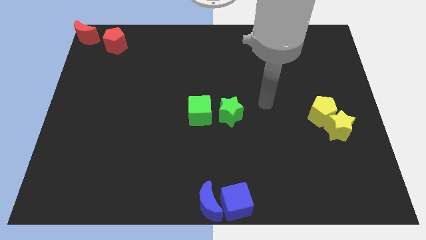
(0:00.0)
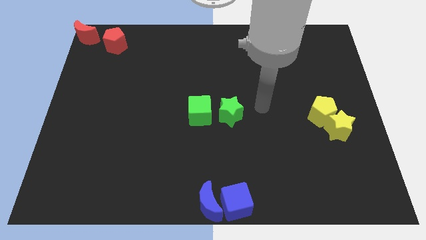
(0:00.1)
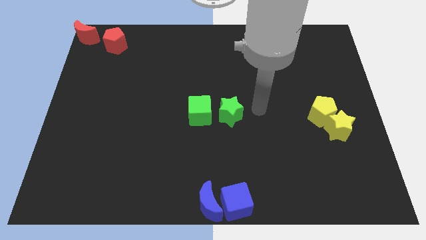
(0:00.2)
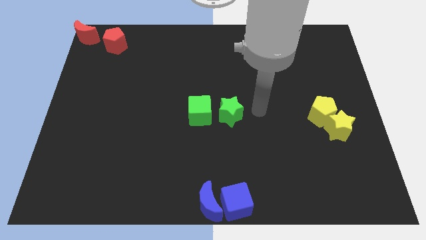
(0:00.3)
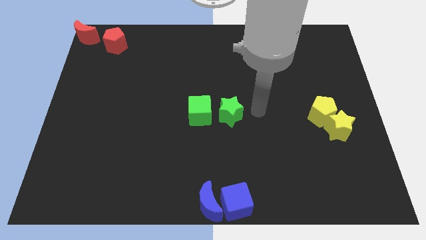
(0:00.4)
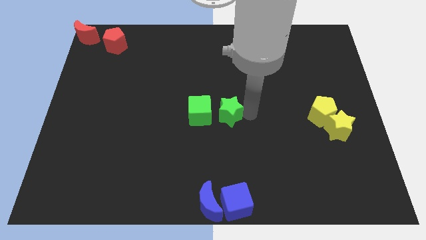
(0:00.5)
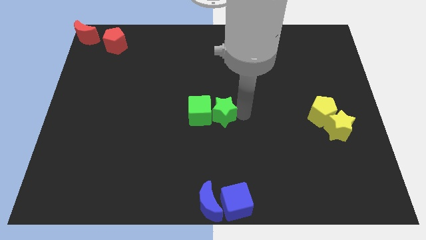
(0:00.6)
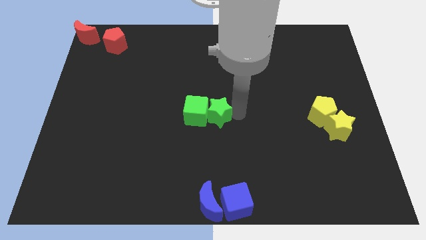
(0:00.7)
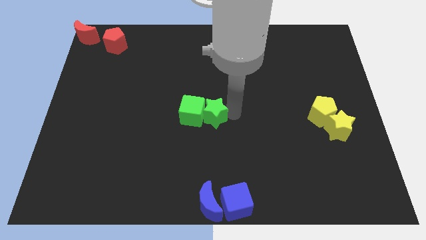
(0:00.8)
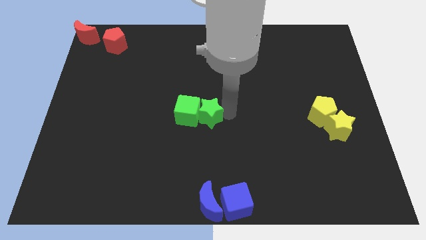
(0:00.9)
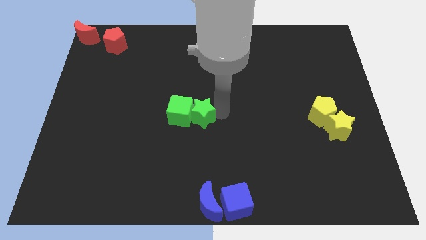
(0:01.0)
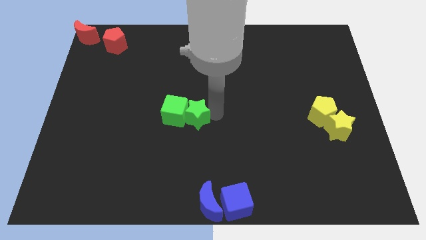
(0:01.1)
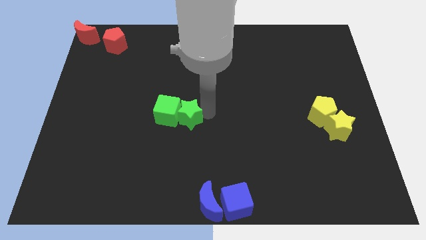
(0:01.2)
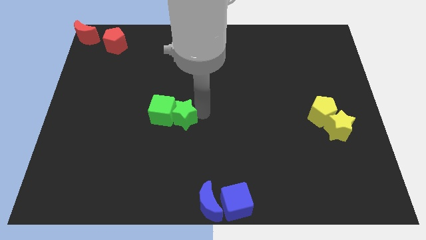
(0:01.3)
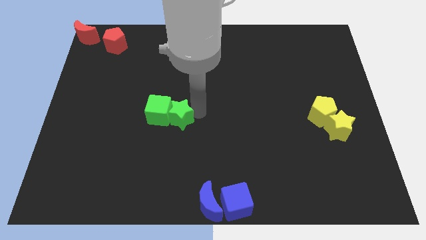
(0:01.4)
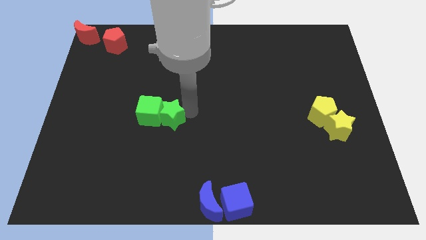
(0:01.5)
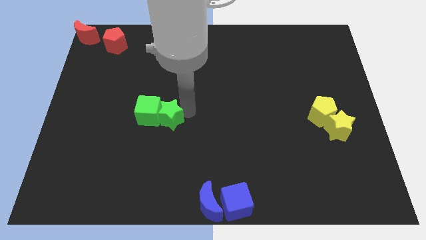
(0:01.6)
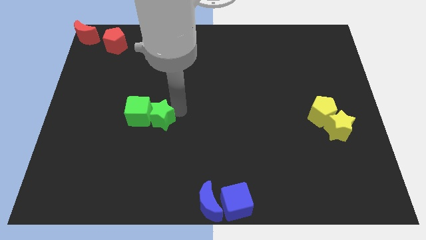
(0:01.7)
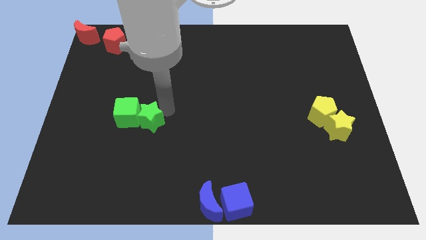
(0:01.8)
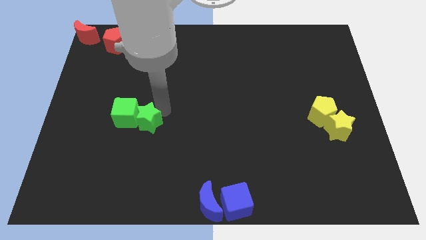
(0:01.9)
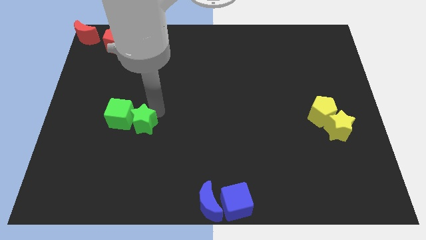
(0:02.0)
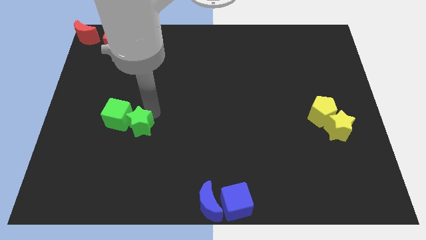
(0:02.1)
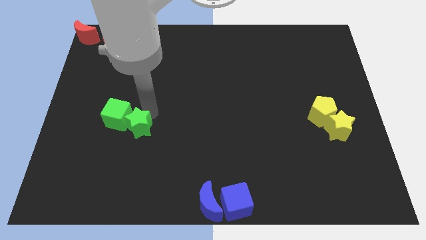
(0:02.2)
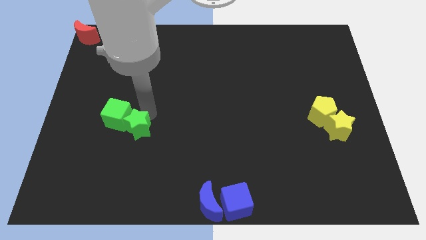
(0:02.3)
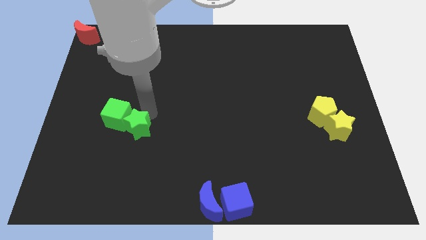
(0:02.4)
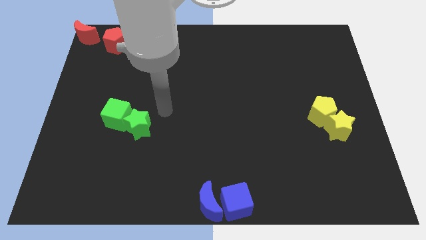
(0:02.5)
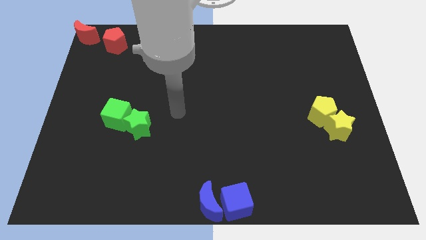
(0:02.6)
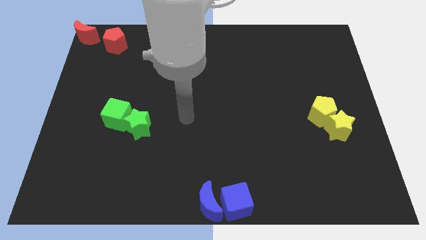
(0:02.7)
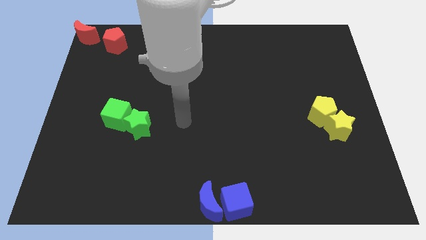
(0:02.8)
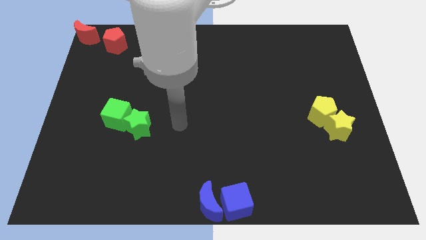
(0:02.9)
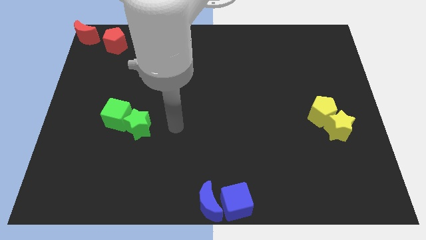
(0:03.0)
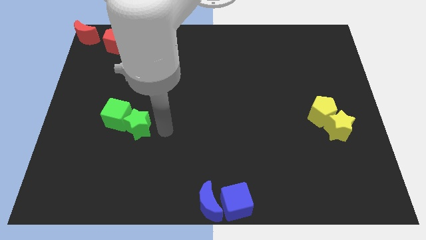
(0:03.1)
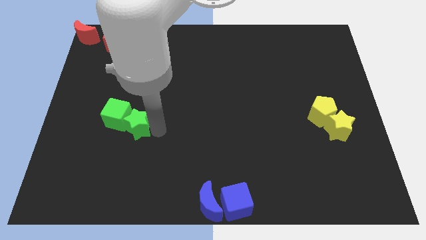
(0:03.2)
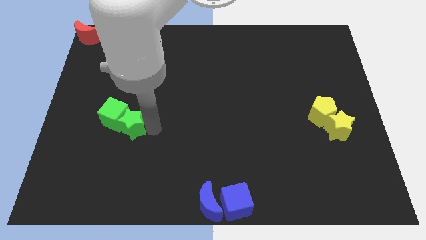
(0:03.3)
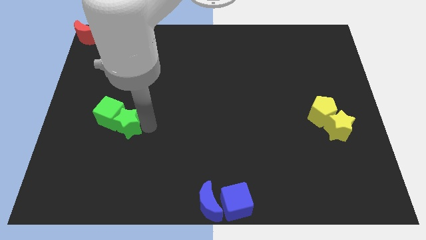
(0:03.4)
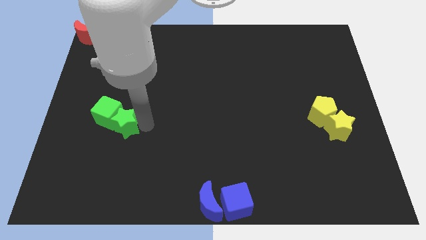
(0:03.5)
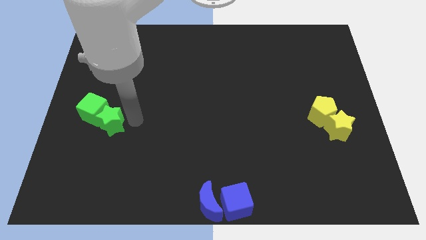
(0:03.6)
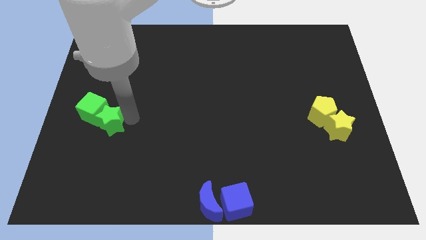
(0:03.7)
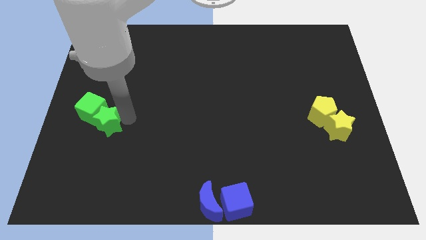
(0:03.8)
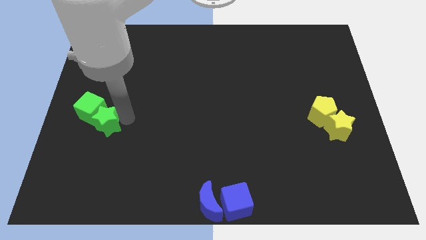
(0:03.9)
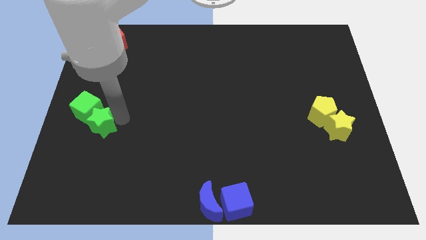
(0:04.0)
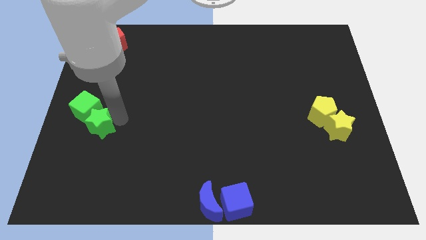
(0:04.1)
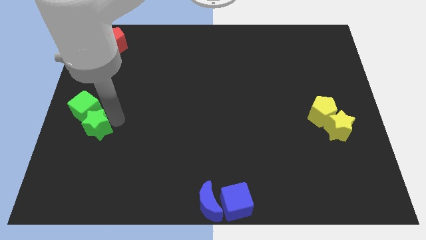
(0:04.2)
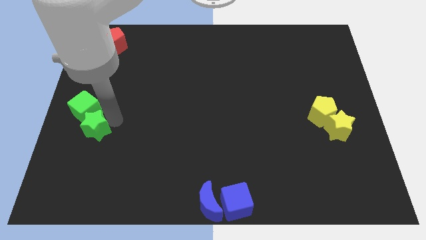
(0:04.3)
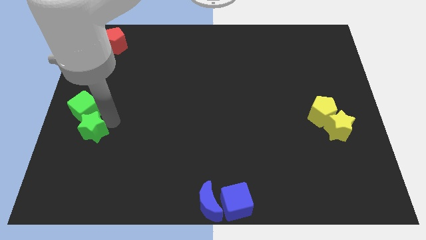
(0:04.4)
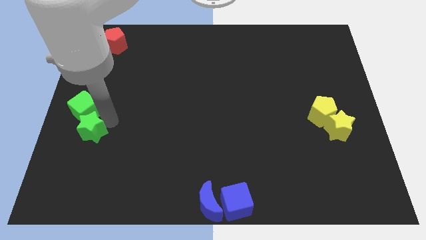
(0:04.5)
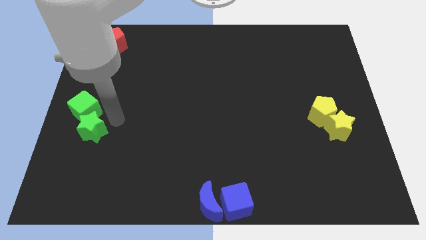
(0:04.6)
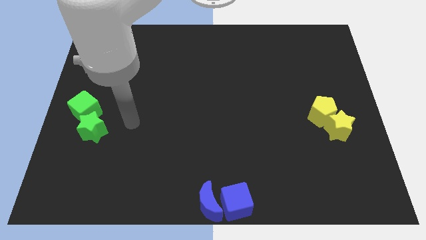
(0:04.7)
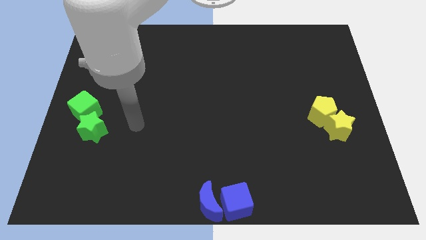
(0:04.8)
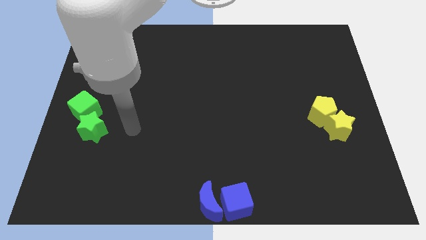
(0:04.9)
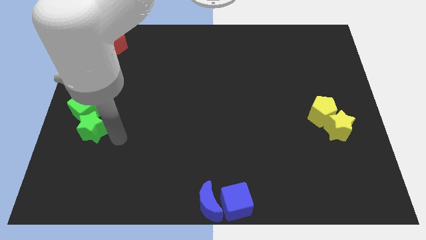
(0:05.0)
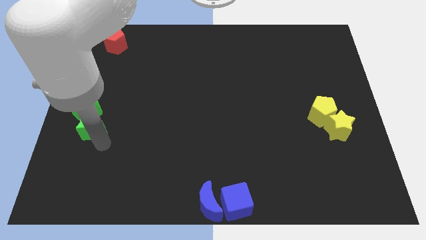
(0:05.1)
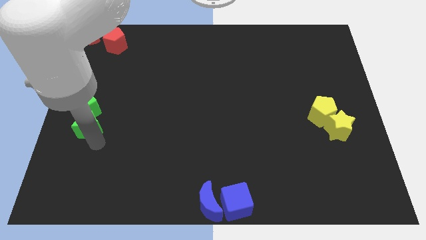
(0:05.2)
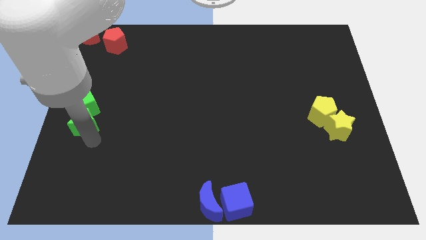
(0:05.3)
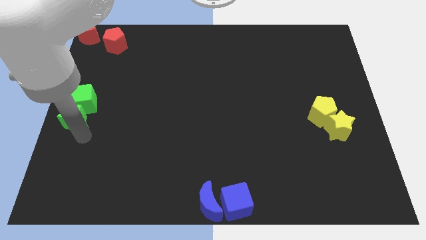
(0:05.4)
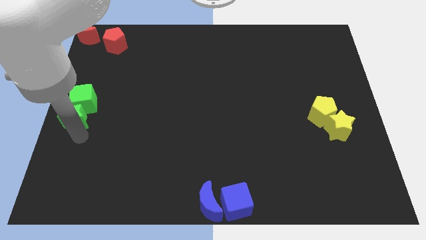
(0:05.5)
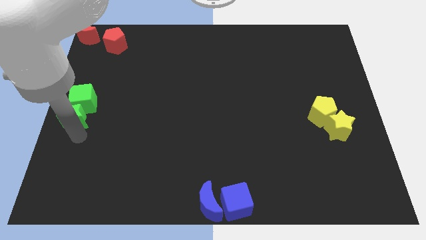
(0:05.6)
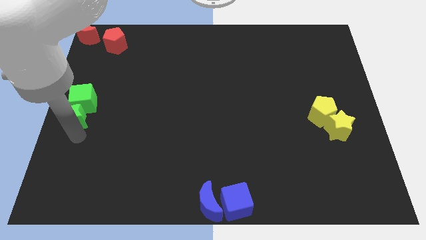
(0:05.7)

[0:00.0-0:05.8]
push the green blocks to the left center of the board

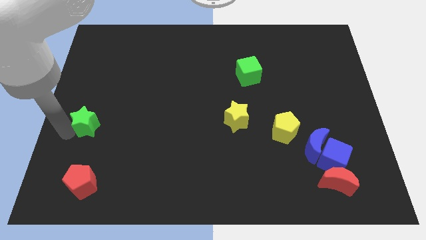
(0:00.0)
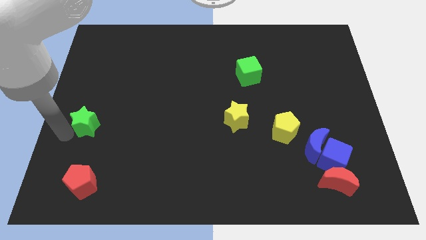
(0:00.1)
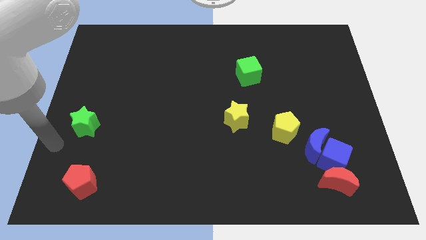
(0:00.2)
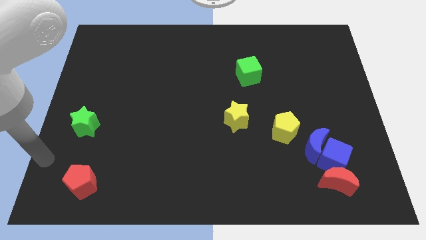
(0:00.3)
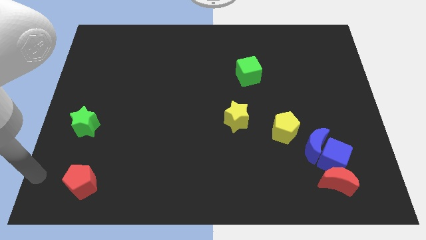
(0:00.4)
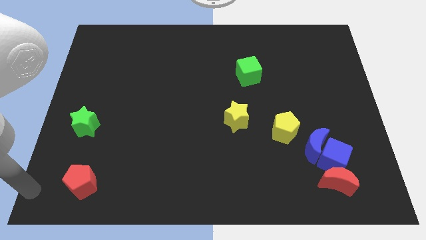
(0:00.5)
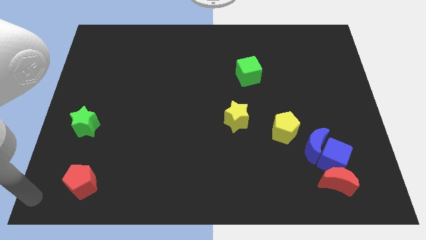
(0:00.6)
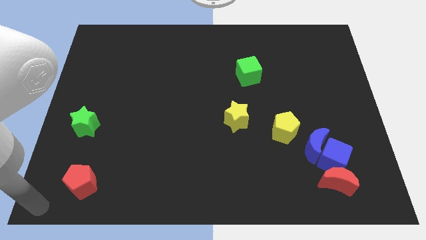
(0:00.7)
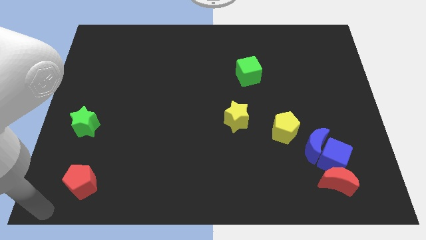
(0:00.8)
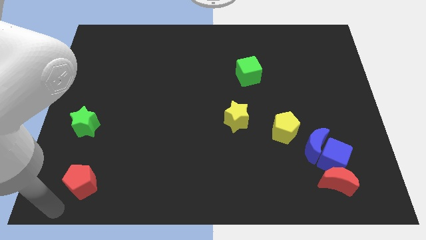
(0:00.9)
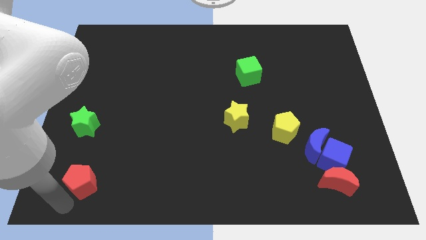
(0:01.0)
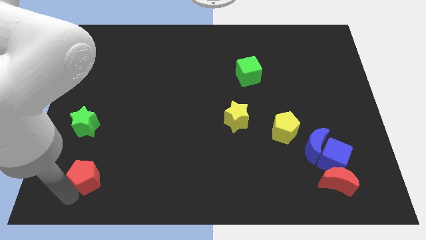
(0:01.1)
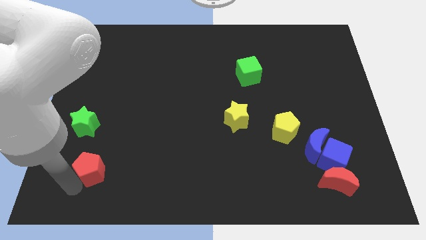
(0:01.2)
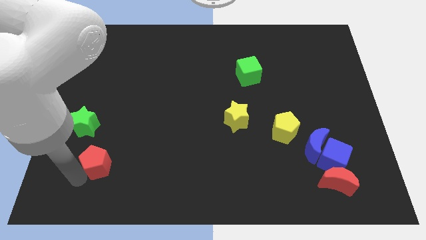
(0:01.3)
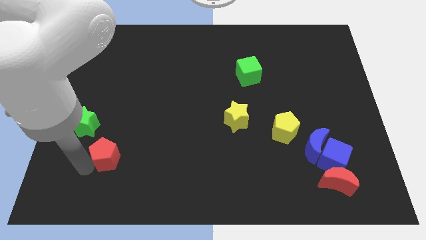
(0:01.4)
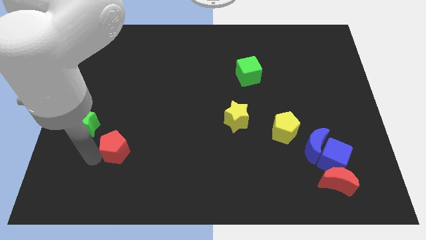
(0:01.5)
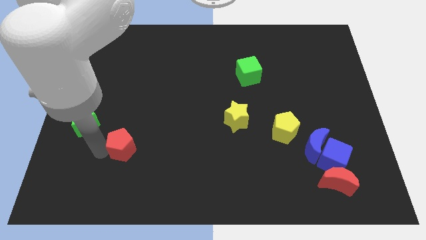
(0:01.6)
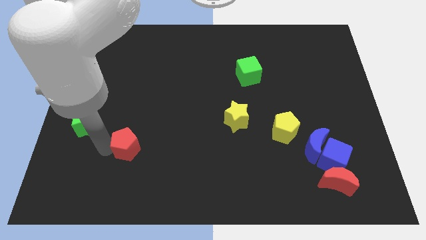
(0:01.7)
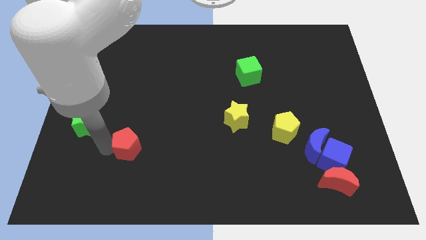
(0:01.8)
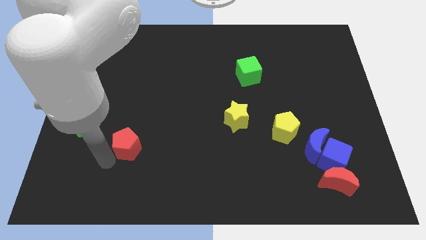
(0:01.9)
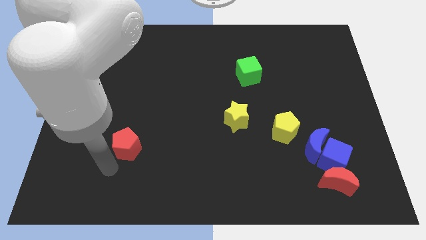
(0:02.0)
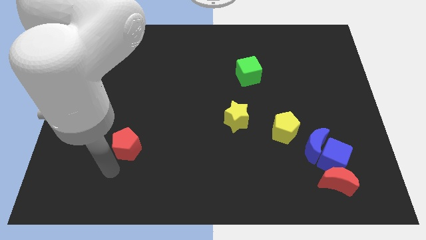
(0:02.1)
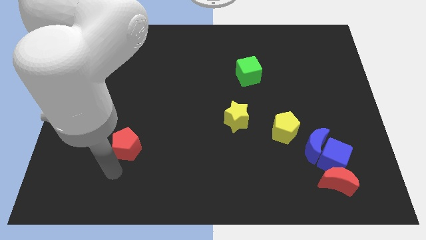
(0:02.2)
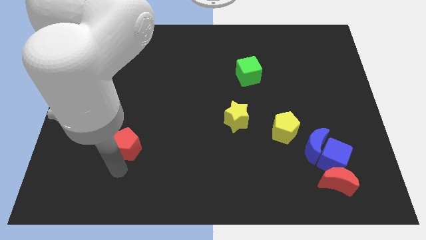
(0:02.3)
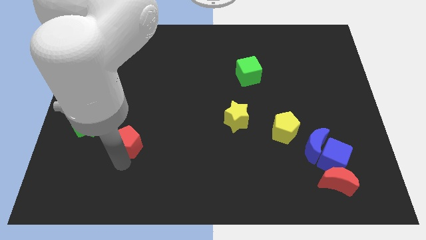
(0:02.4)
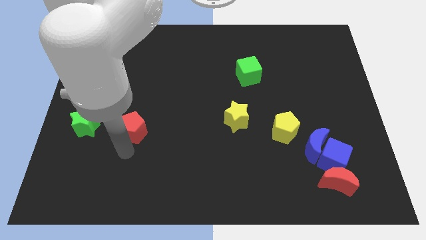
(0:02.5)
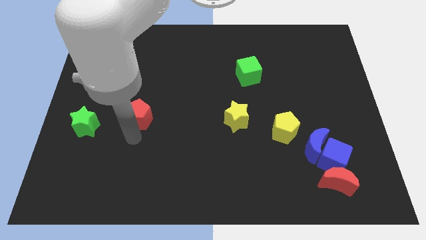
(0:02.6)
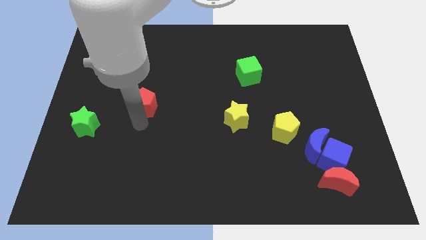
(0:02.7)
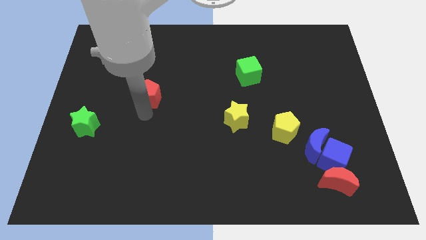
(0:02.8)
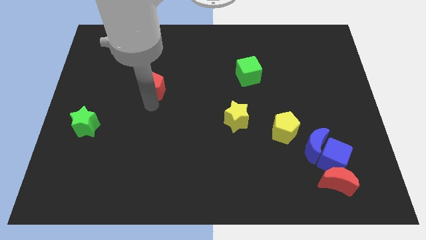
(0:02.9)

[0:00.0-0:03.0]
move red pentagon to the top right of green star
